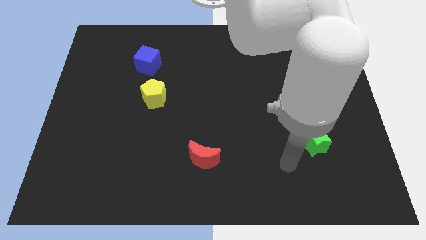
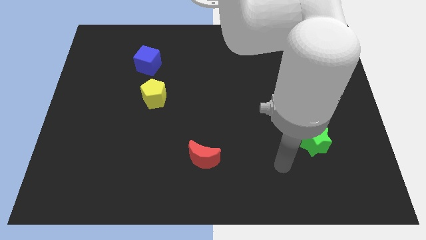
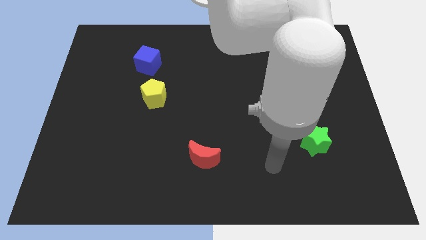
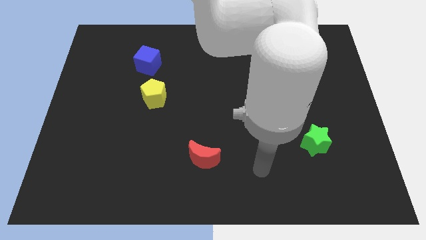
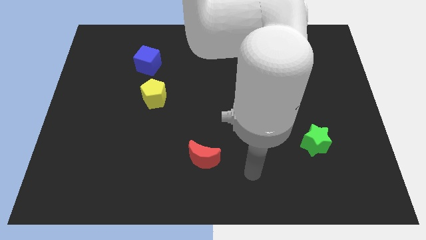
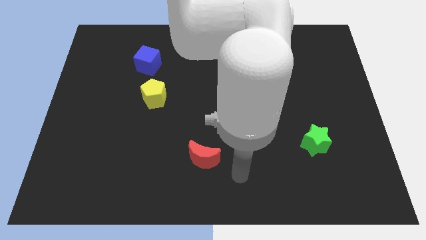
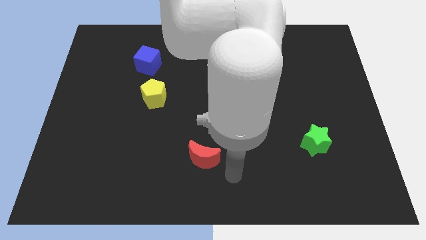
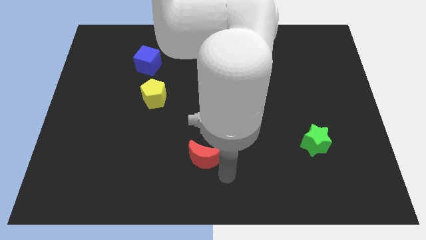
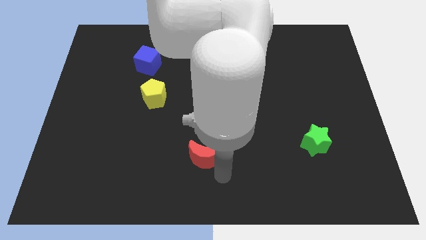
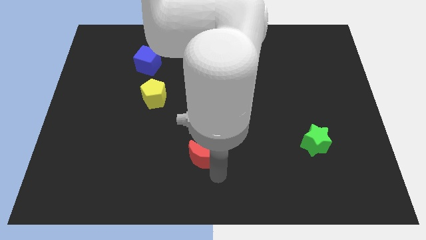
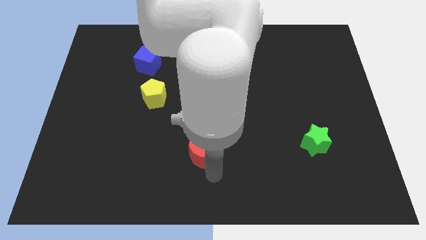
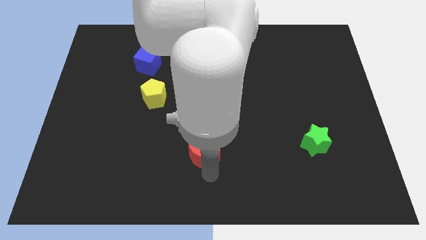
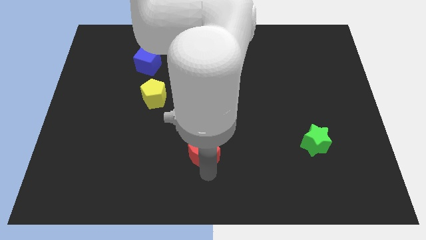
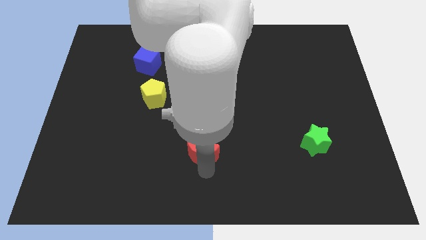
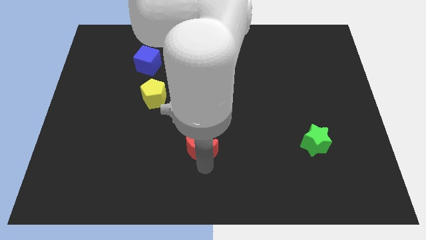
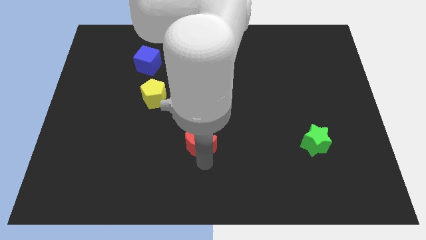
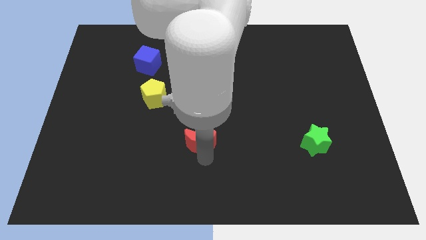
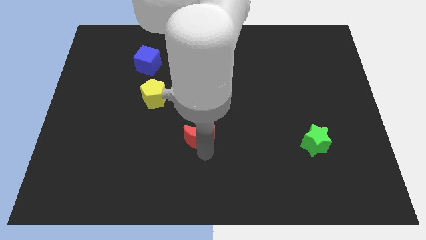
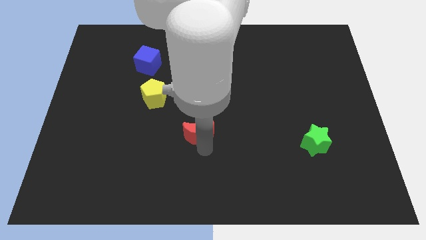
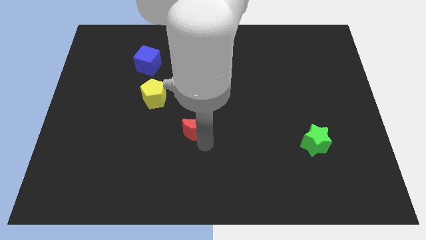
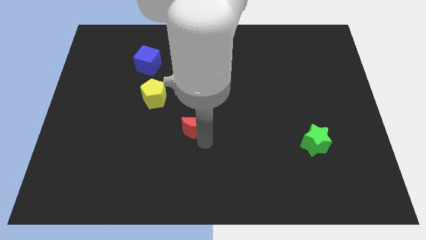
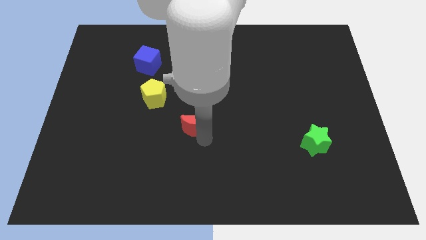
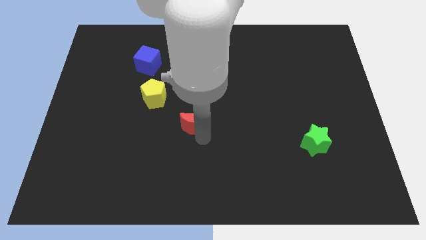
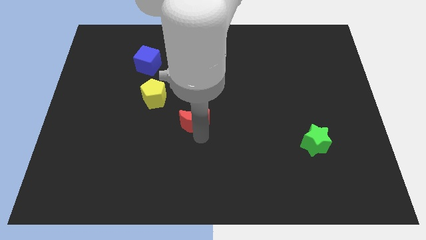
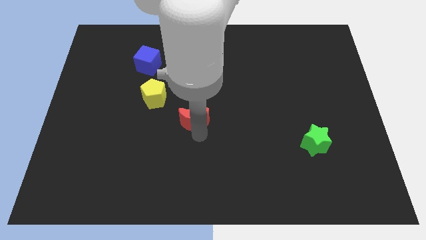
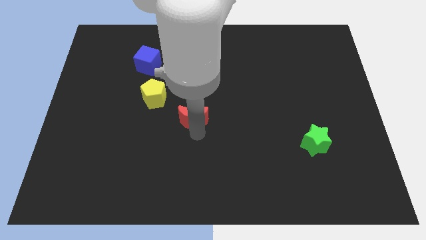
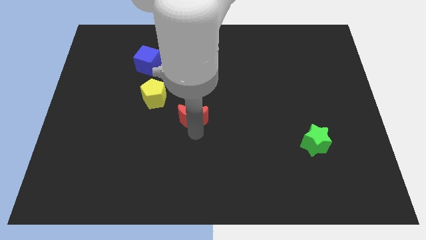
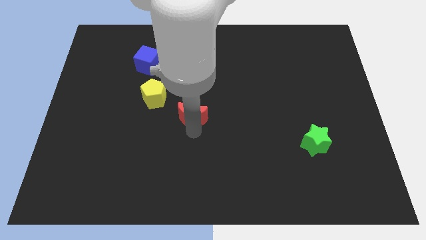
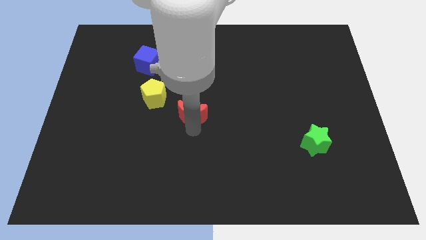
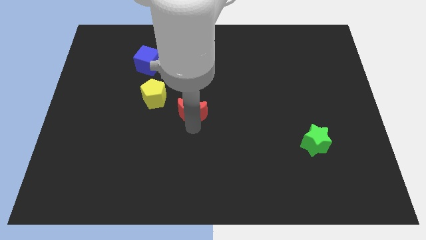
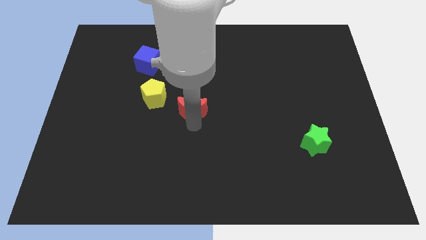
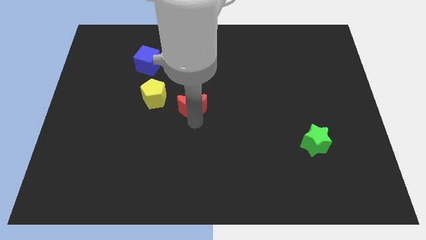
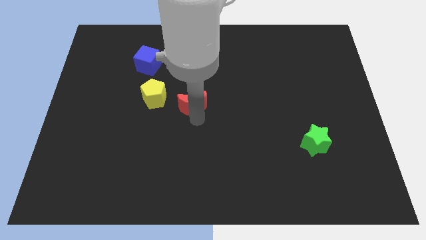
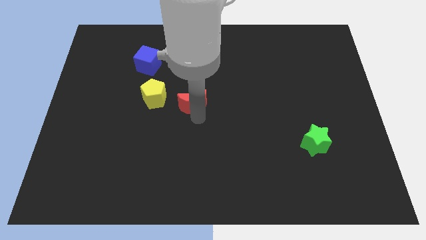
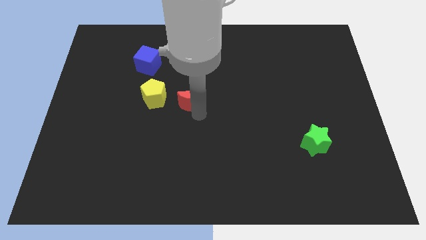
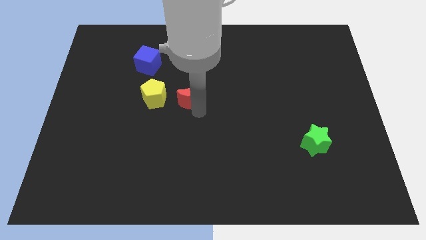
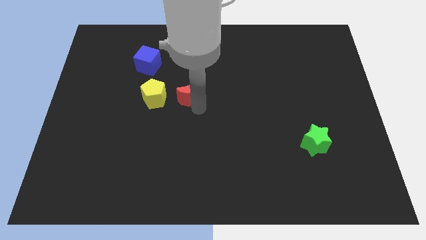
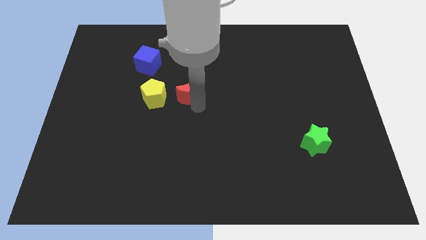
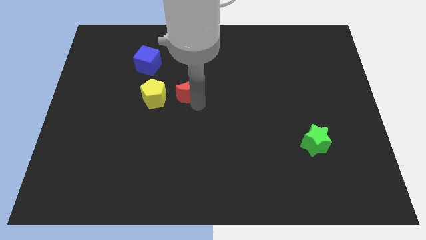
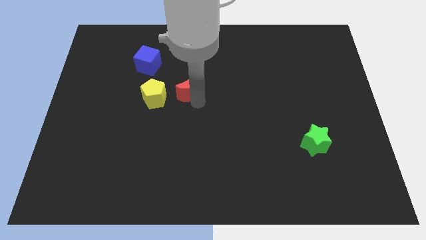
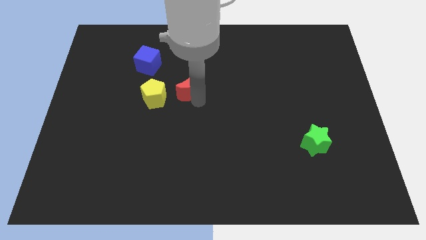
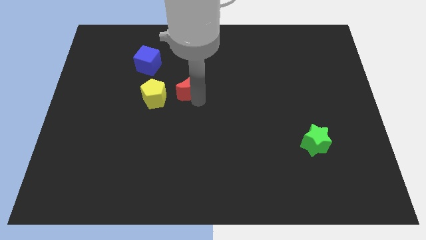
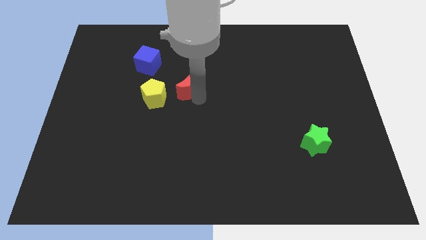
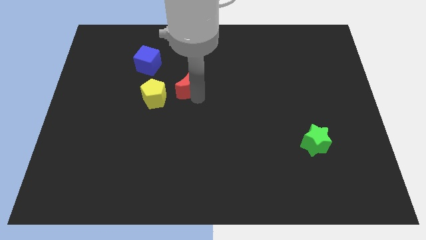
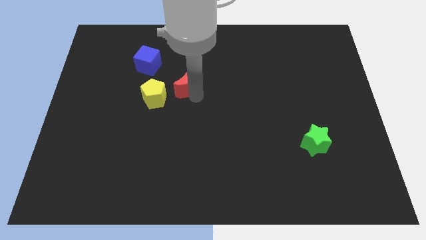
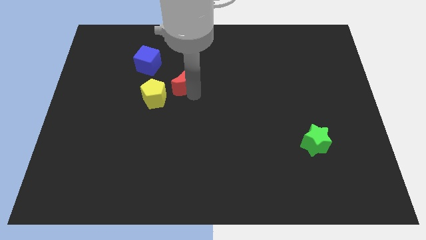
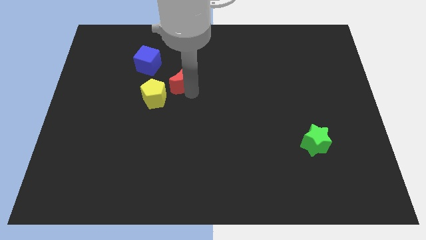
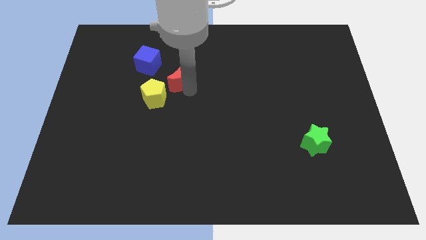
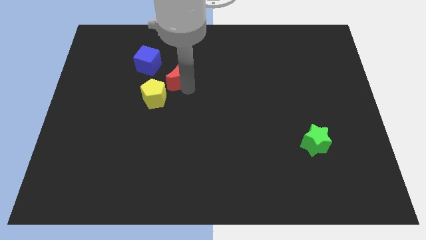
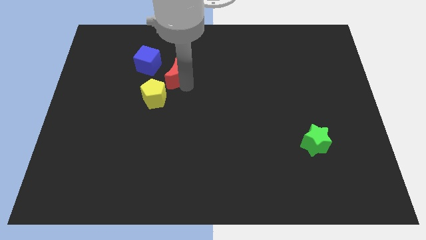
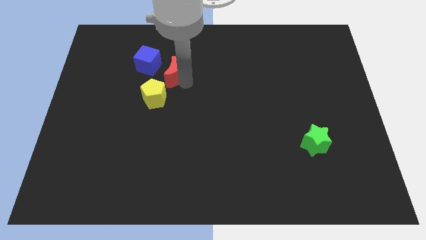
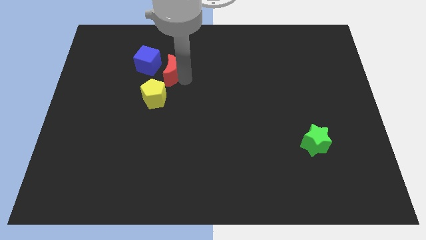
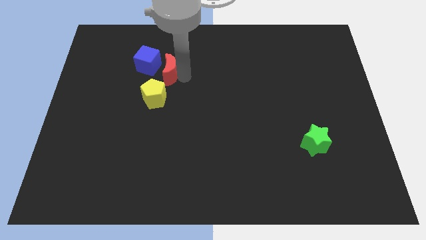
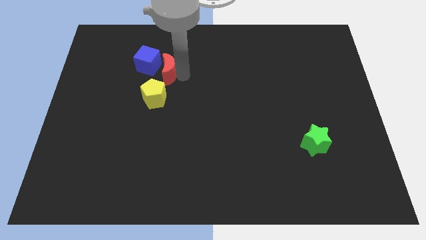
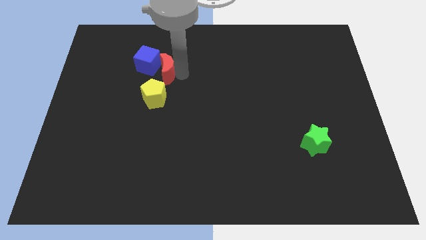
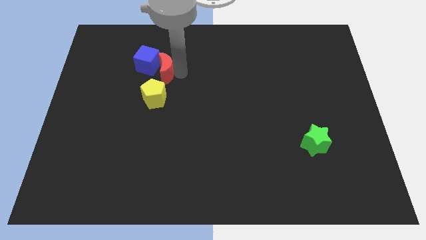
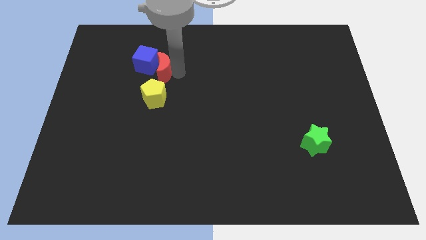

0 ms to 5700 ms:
put the moon close to the cube

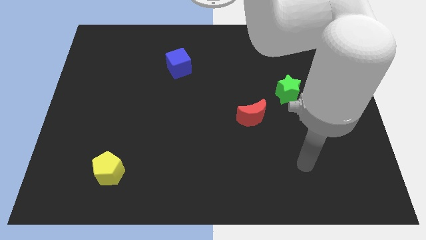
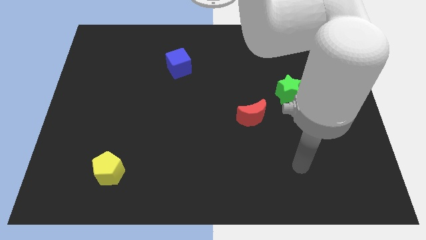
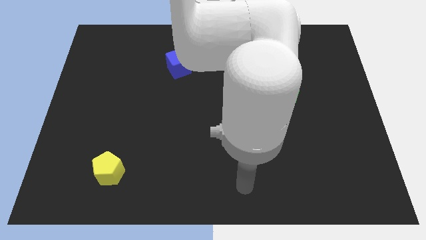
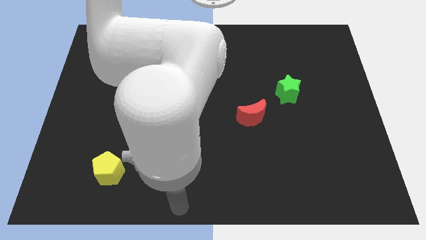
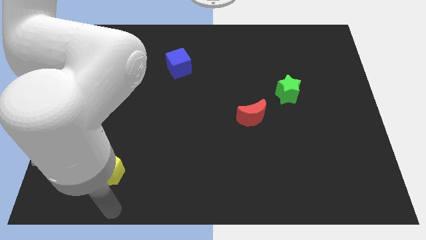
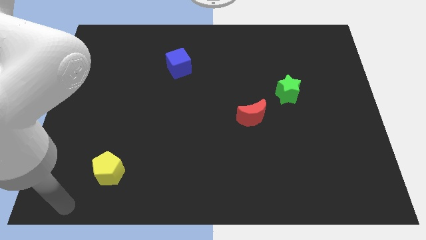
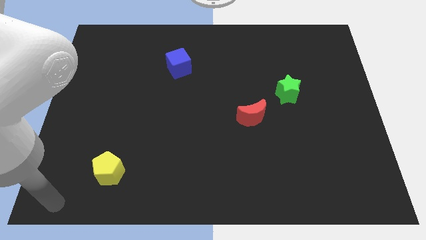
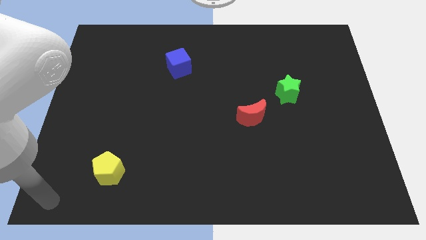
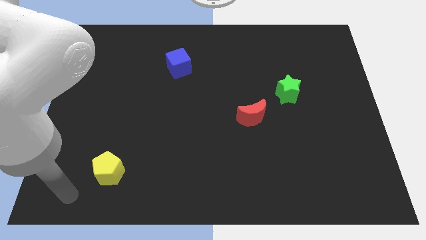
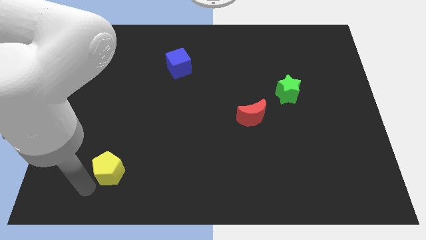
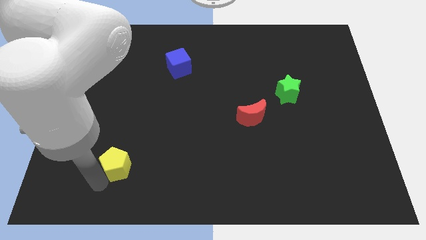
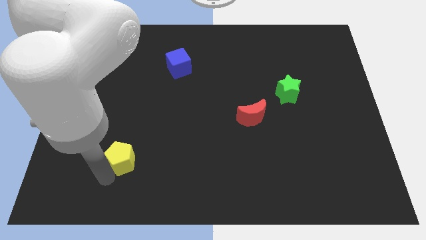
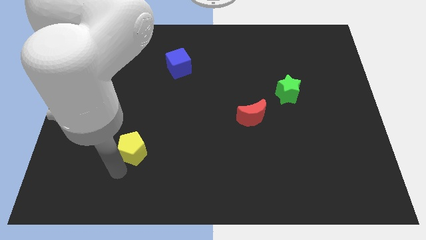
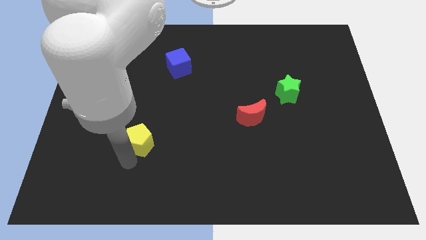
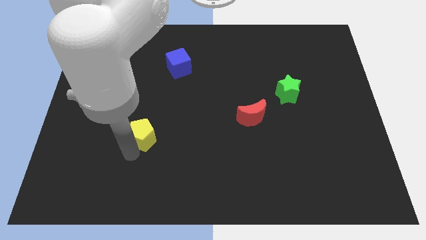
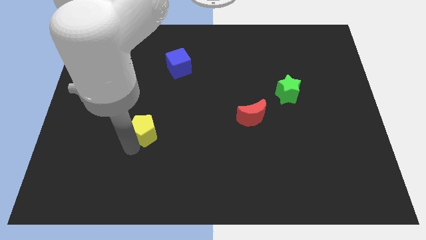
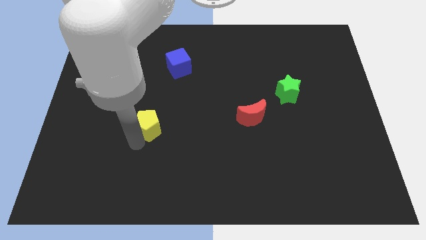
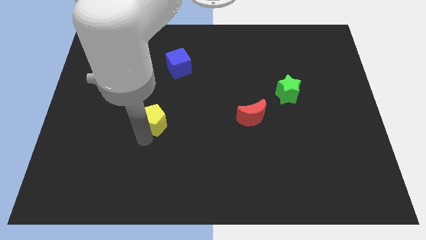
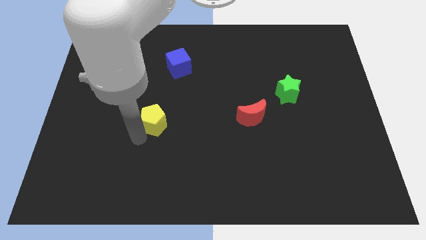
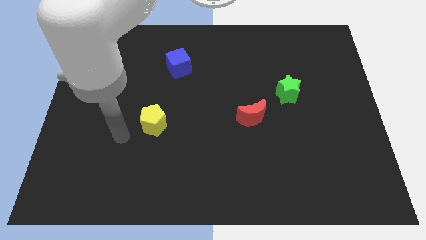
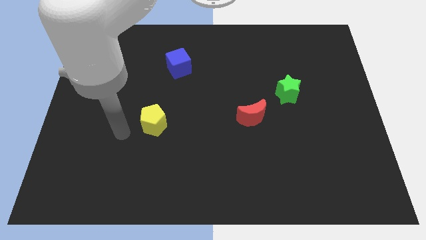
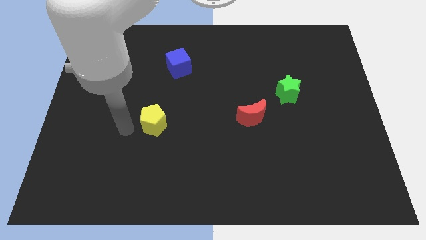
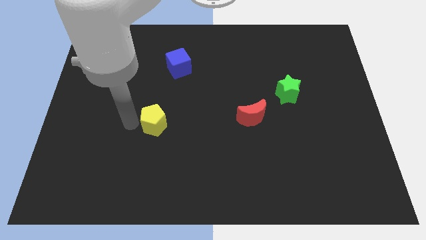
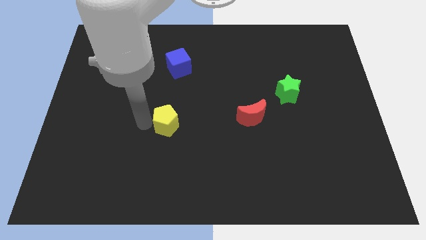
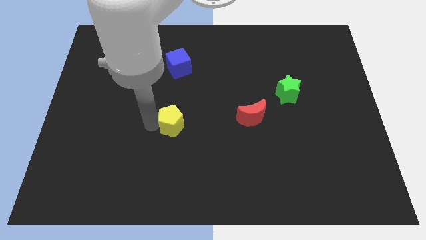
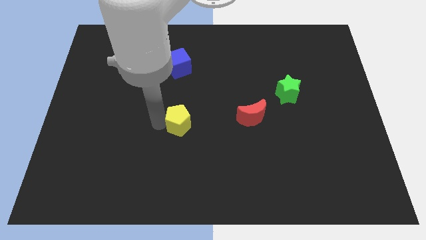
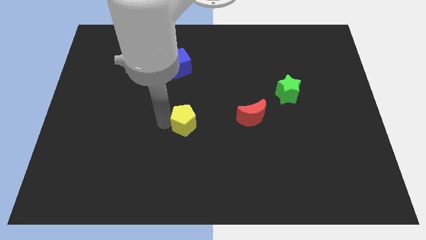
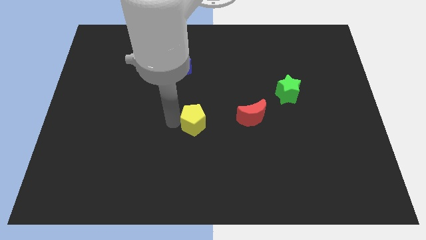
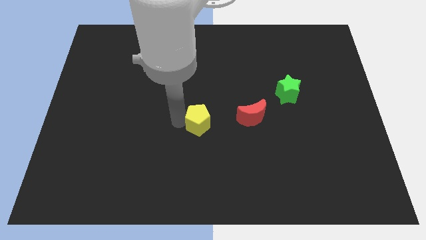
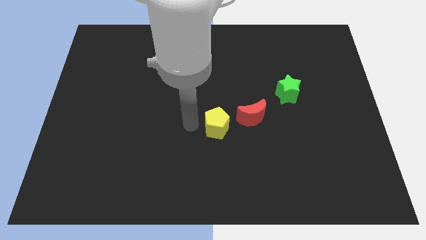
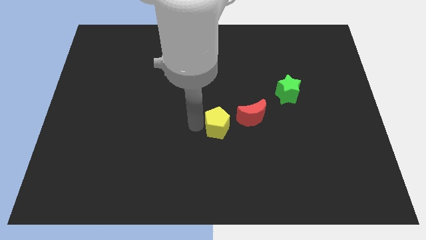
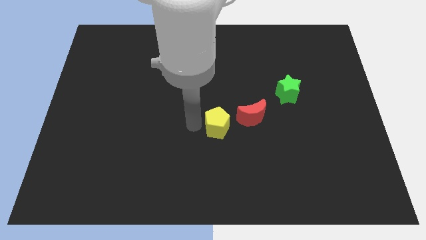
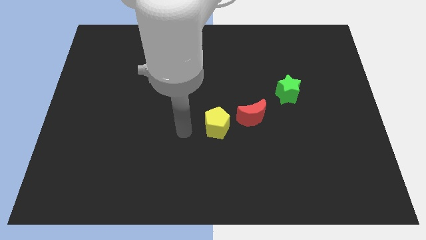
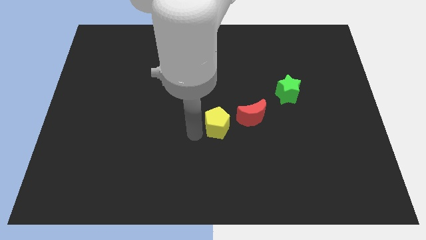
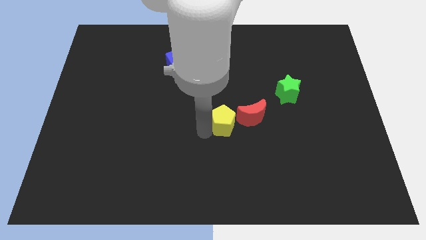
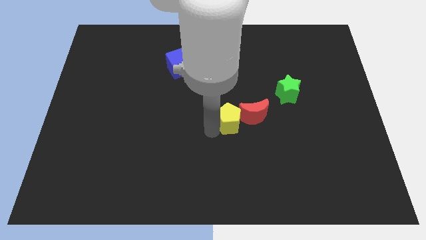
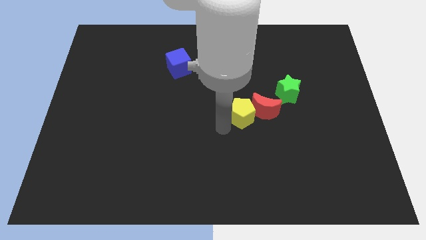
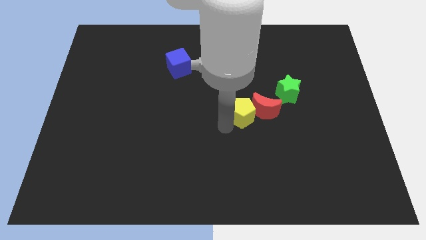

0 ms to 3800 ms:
slide the yellow block towards the red moon
